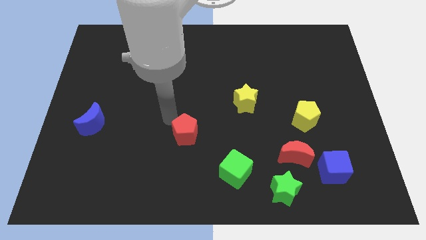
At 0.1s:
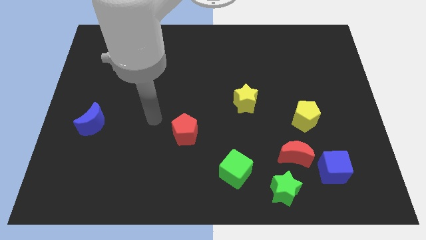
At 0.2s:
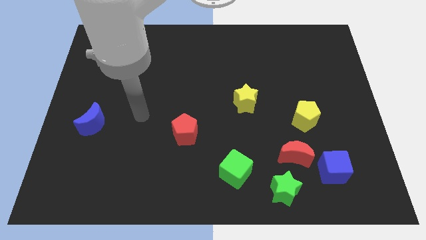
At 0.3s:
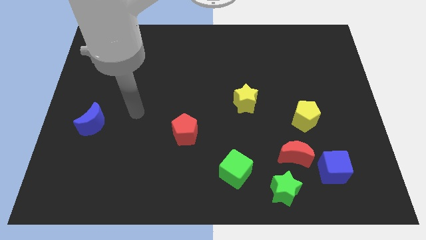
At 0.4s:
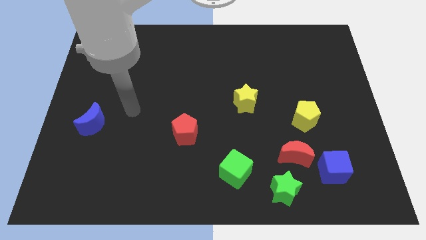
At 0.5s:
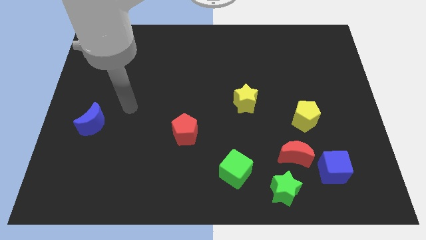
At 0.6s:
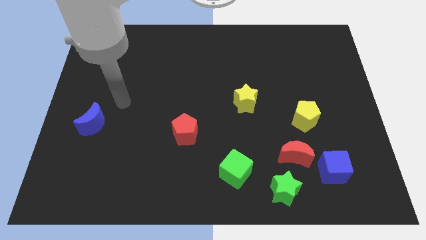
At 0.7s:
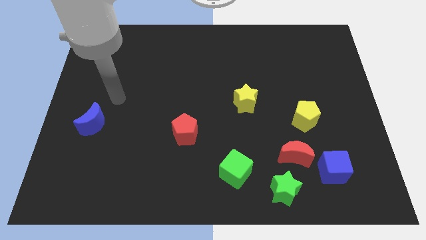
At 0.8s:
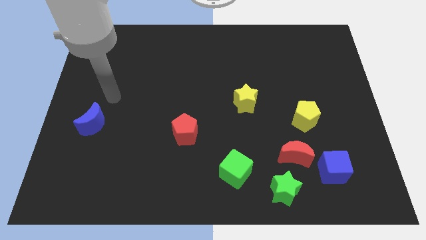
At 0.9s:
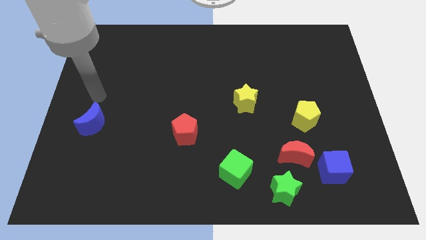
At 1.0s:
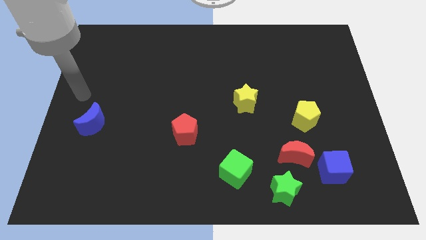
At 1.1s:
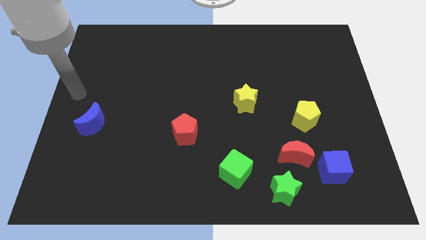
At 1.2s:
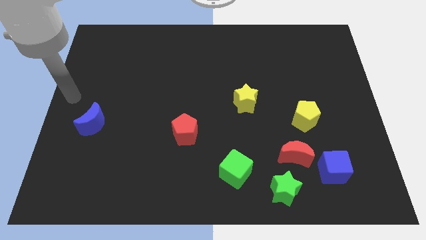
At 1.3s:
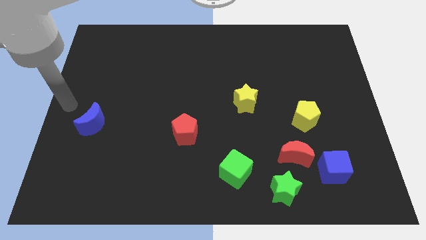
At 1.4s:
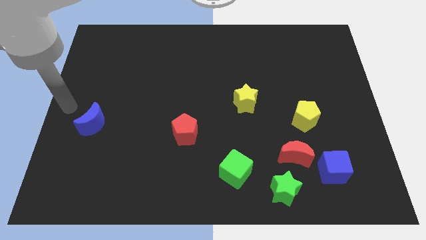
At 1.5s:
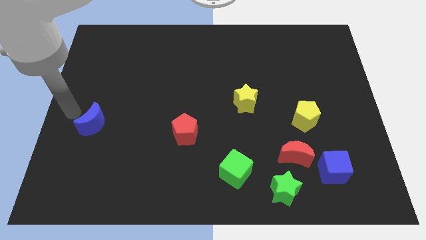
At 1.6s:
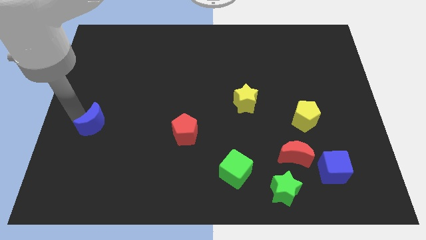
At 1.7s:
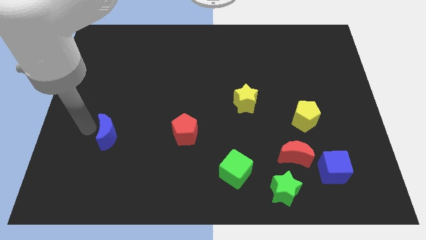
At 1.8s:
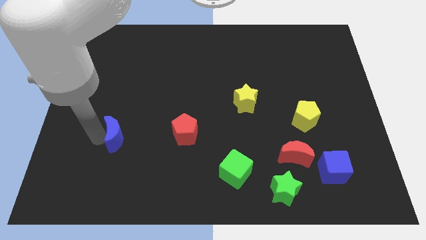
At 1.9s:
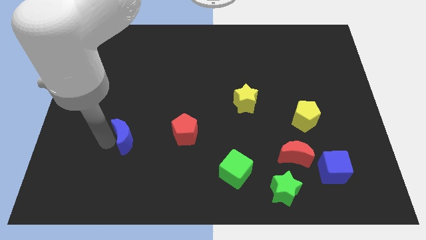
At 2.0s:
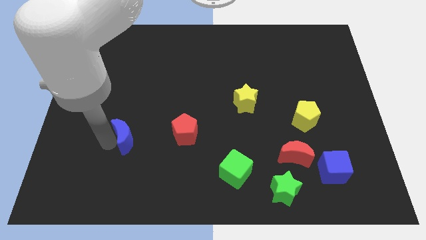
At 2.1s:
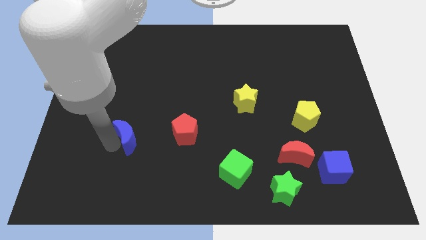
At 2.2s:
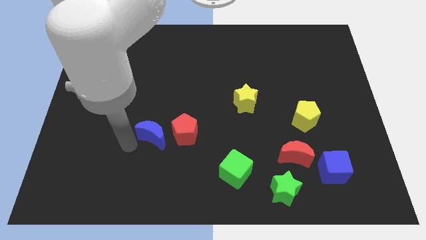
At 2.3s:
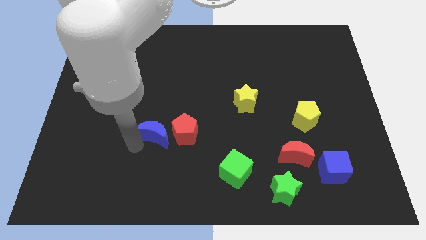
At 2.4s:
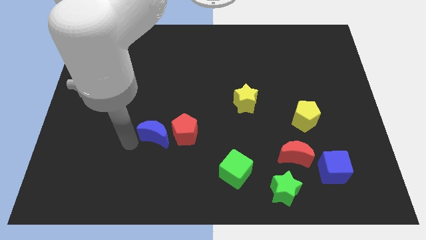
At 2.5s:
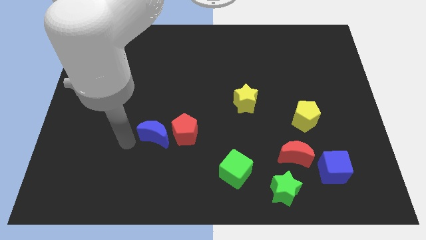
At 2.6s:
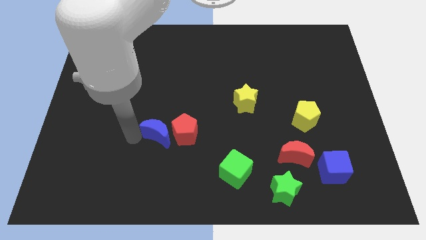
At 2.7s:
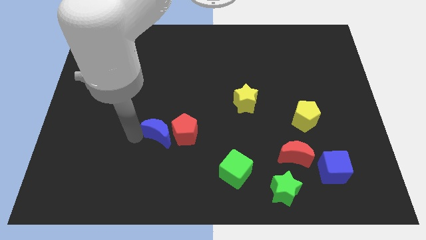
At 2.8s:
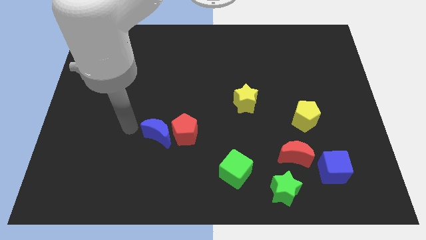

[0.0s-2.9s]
push the blue crescent to the left of the red pentagon

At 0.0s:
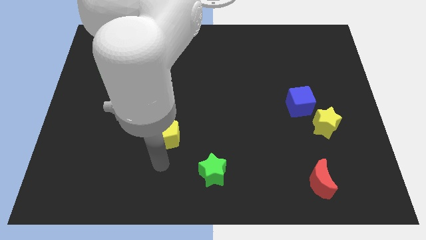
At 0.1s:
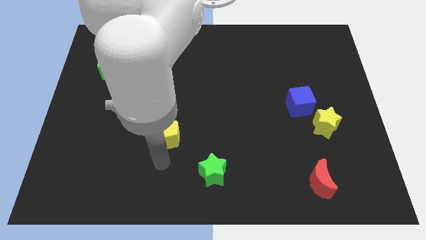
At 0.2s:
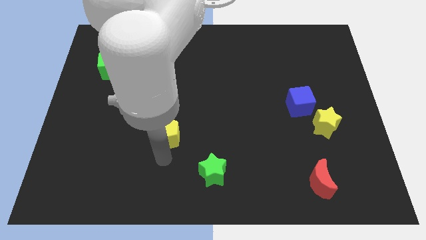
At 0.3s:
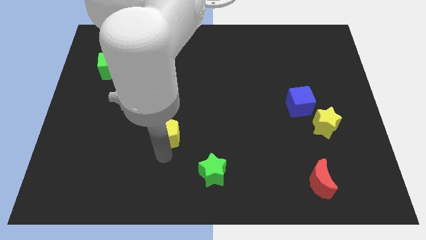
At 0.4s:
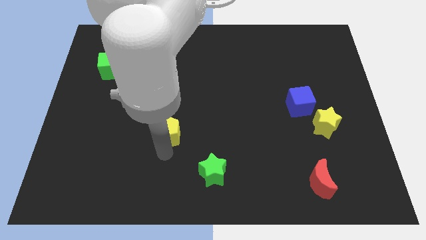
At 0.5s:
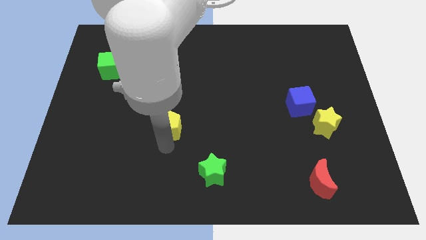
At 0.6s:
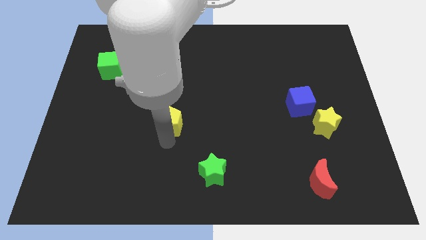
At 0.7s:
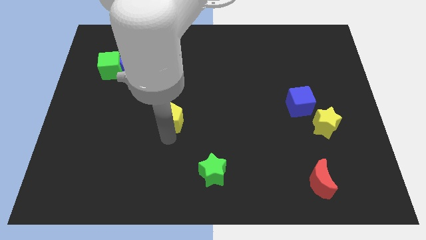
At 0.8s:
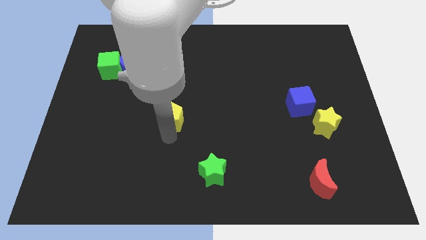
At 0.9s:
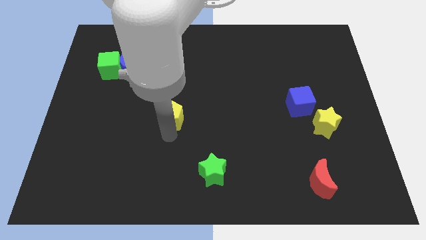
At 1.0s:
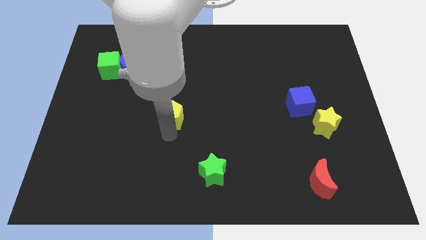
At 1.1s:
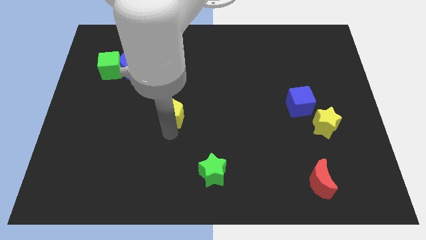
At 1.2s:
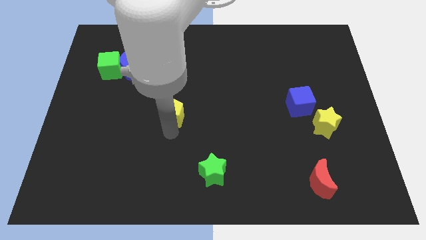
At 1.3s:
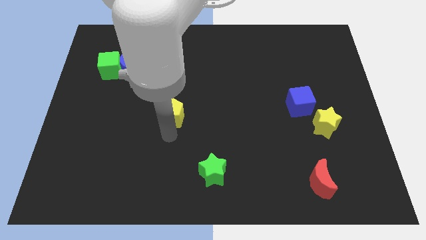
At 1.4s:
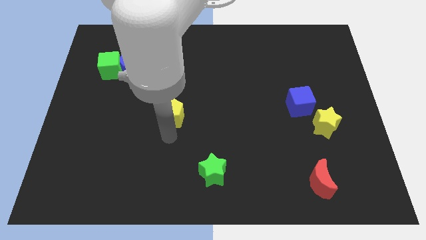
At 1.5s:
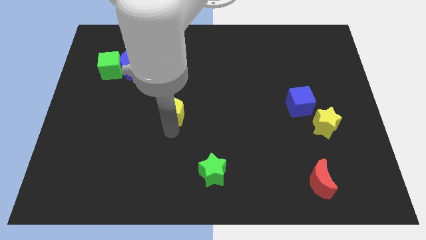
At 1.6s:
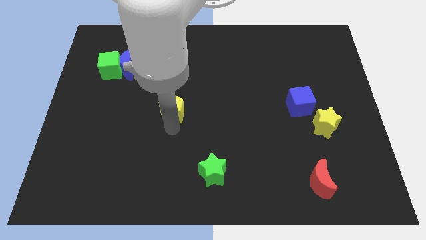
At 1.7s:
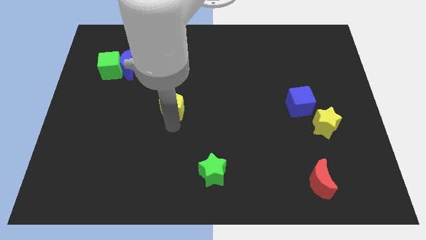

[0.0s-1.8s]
move the yellow pentagon towards the red pentagon

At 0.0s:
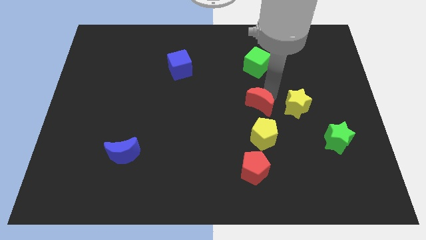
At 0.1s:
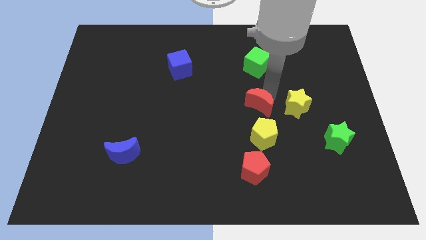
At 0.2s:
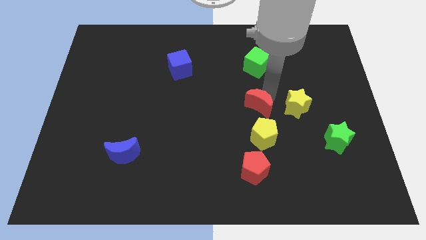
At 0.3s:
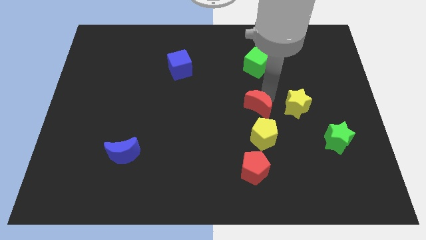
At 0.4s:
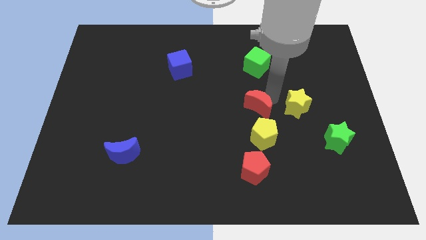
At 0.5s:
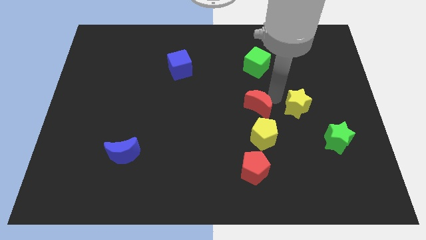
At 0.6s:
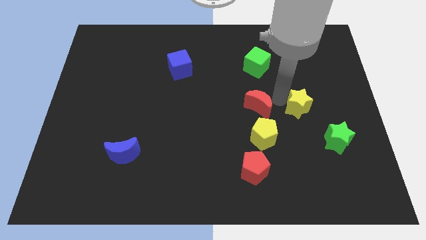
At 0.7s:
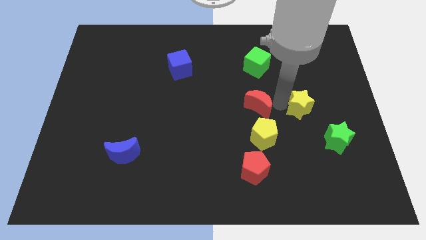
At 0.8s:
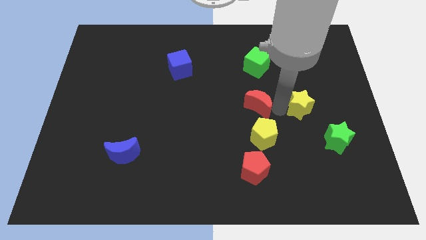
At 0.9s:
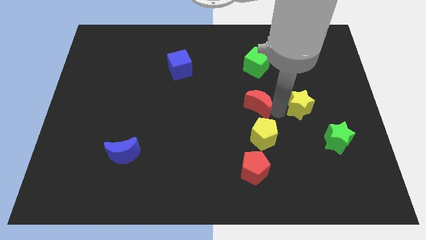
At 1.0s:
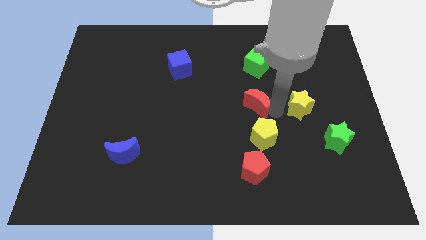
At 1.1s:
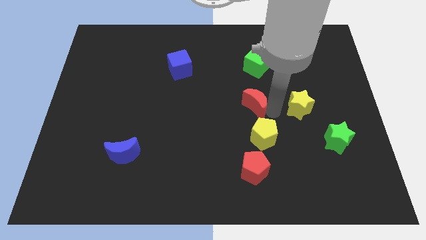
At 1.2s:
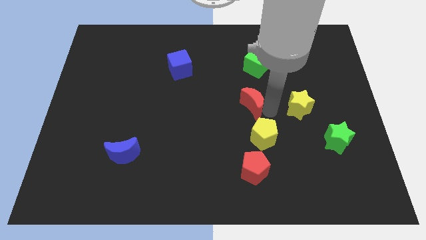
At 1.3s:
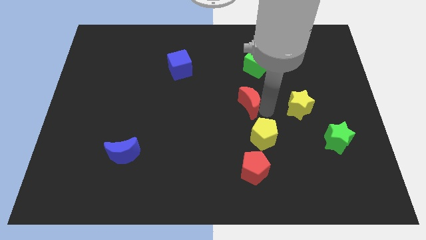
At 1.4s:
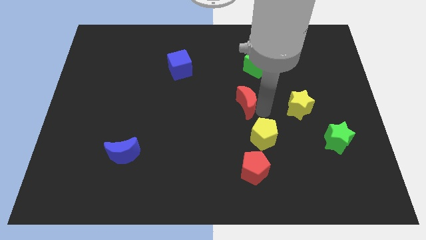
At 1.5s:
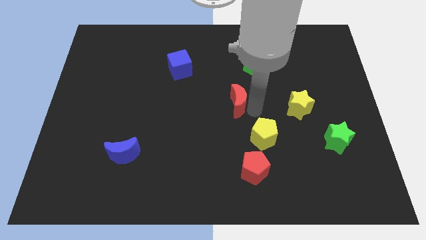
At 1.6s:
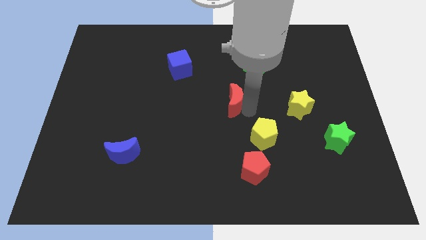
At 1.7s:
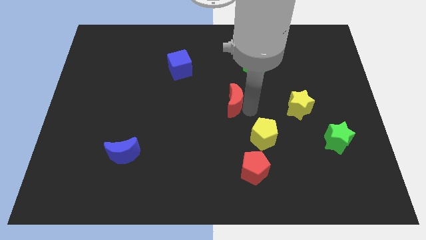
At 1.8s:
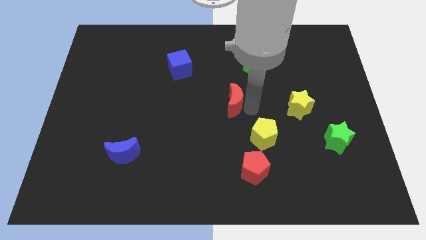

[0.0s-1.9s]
move the red moon towards the center

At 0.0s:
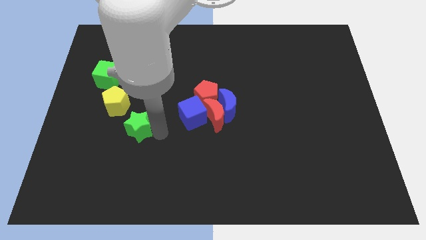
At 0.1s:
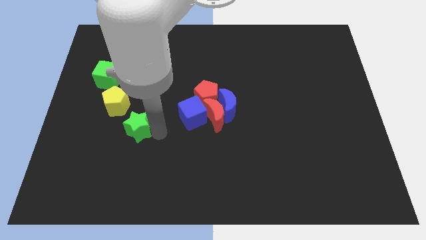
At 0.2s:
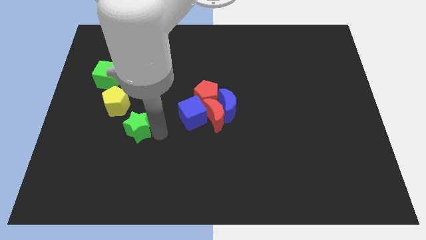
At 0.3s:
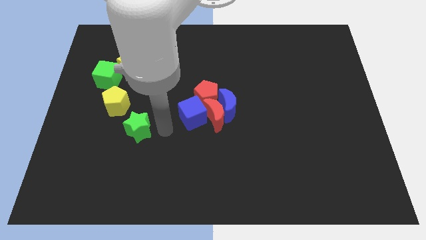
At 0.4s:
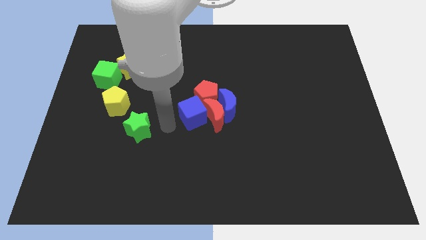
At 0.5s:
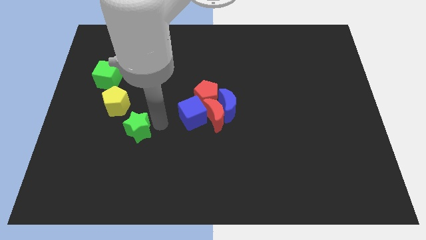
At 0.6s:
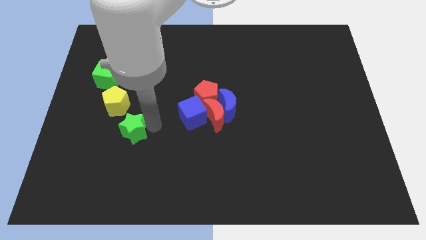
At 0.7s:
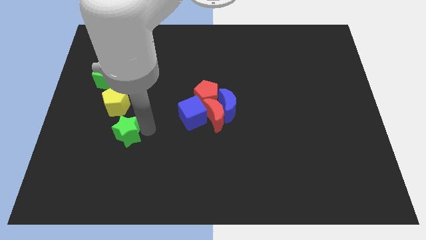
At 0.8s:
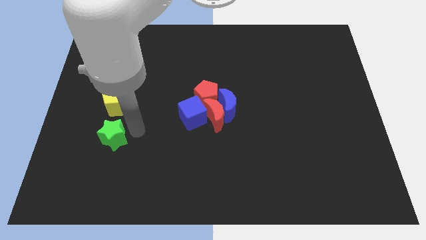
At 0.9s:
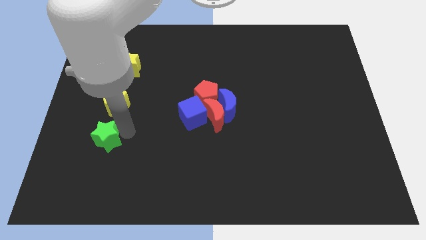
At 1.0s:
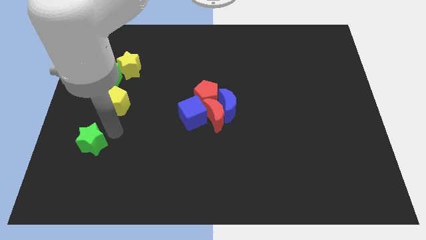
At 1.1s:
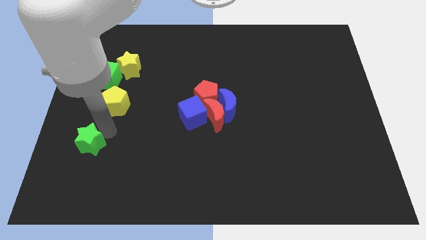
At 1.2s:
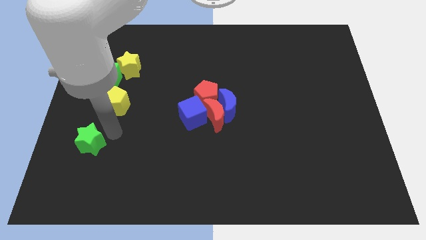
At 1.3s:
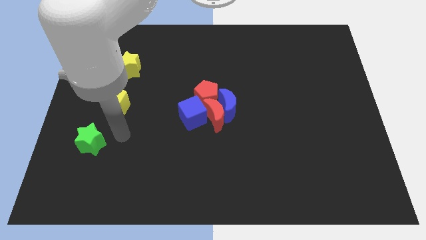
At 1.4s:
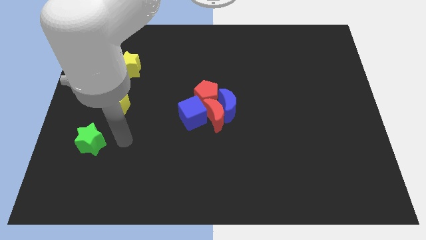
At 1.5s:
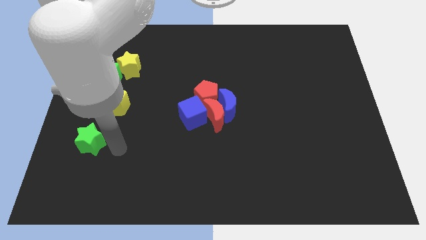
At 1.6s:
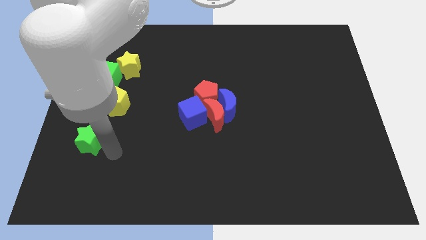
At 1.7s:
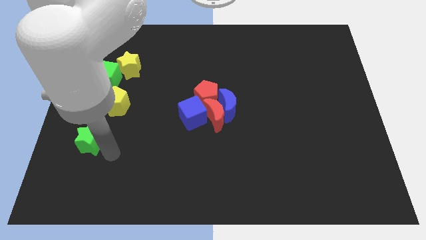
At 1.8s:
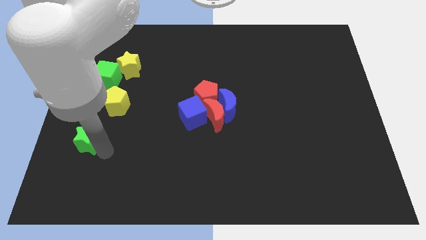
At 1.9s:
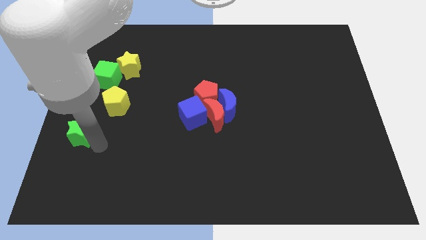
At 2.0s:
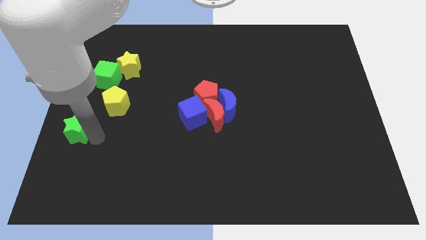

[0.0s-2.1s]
slide the green star diagonally bottom left to the yellow pentagon

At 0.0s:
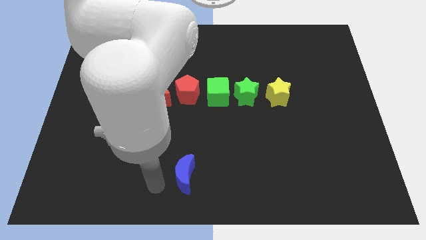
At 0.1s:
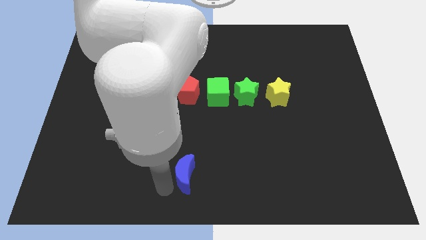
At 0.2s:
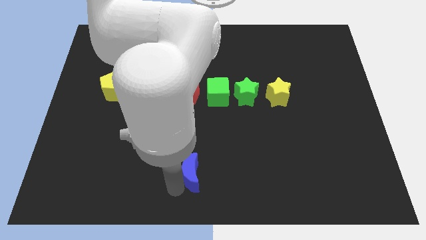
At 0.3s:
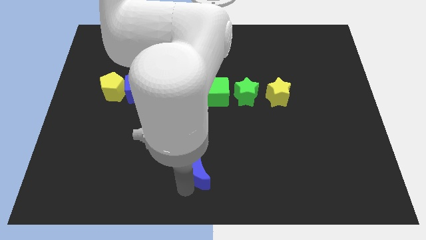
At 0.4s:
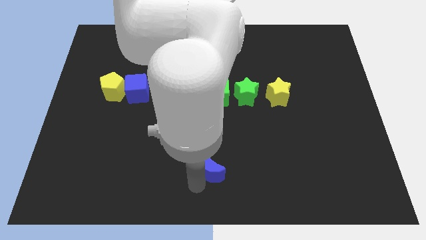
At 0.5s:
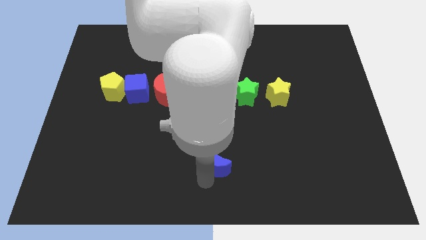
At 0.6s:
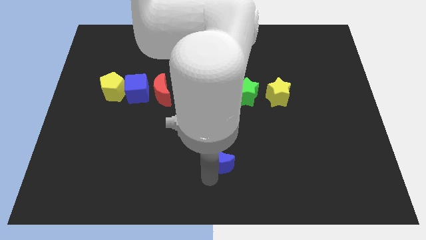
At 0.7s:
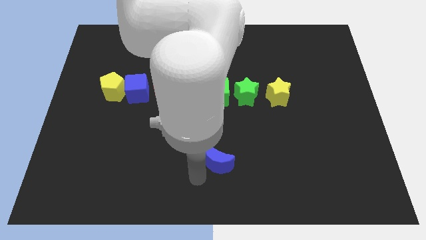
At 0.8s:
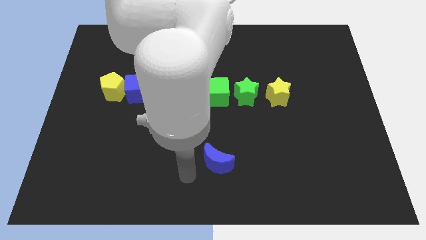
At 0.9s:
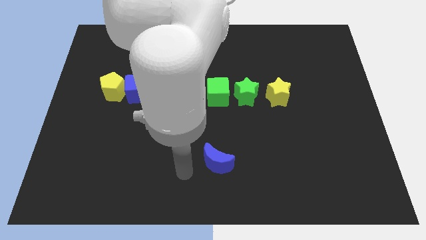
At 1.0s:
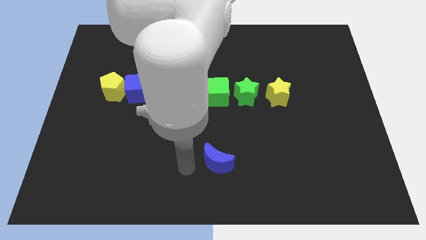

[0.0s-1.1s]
push the blue crescent to the top of the board
